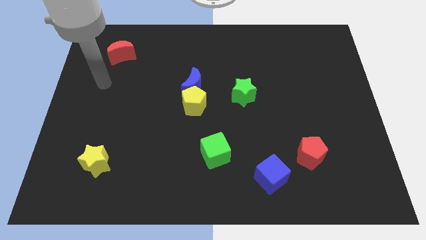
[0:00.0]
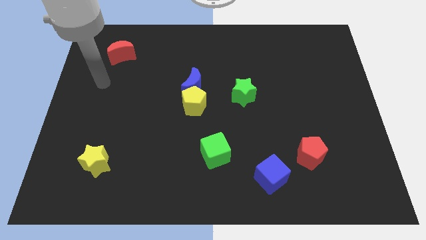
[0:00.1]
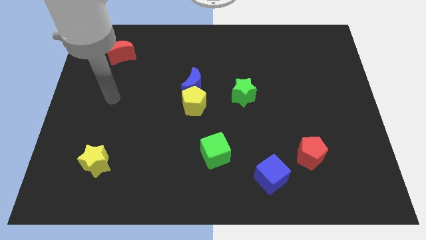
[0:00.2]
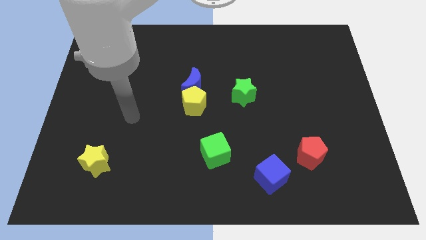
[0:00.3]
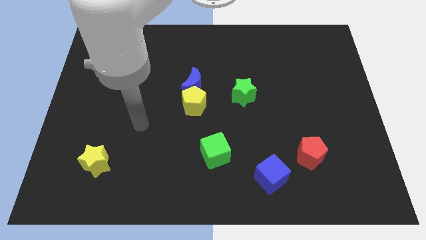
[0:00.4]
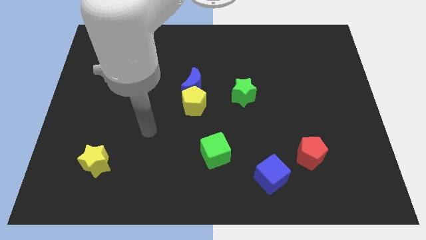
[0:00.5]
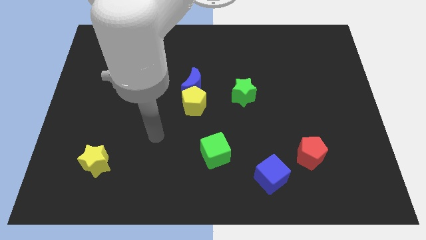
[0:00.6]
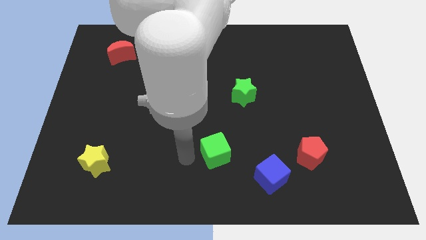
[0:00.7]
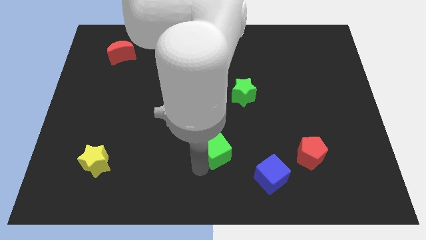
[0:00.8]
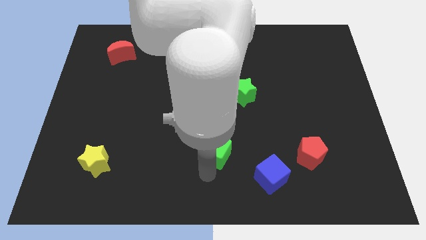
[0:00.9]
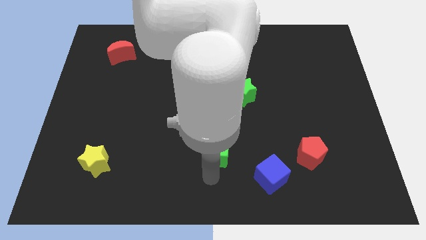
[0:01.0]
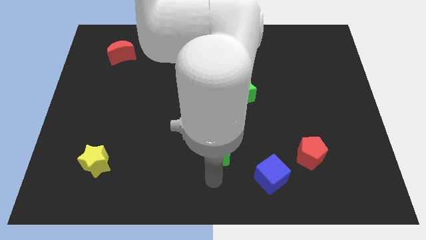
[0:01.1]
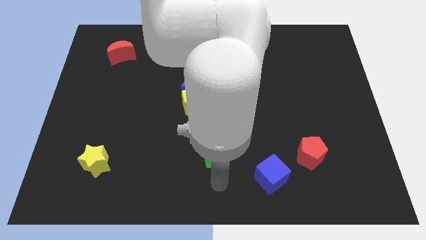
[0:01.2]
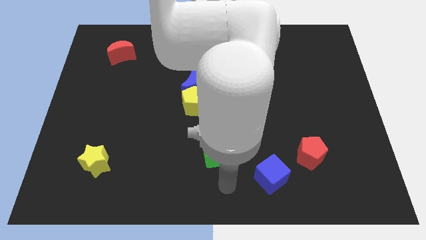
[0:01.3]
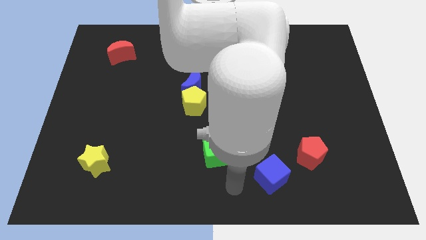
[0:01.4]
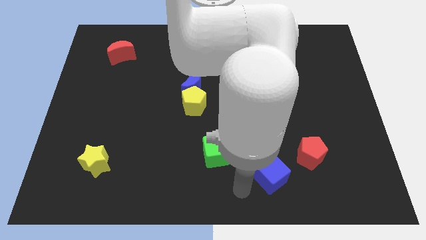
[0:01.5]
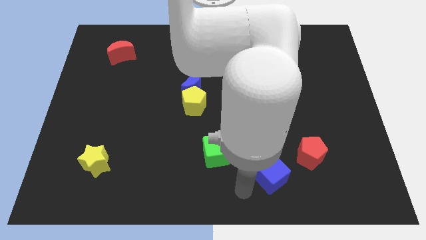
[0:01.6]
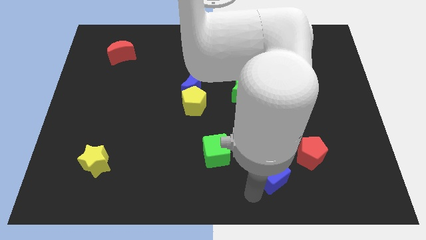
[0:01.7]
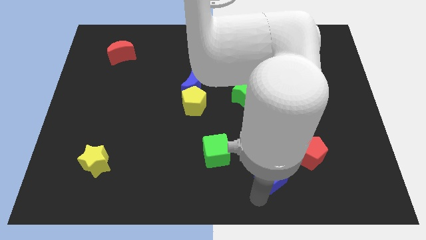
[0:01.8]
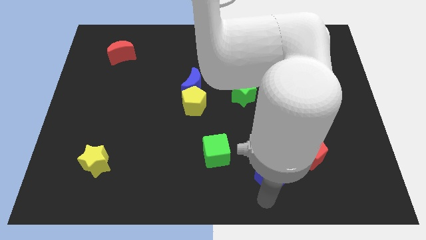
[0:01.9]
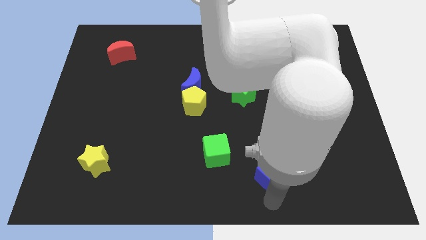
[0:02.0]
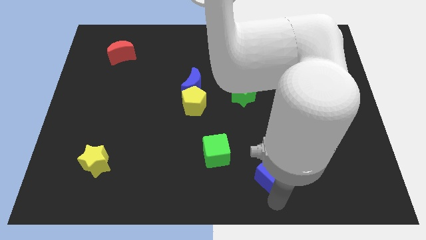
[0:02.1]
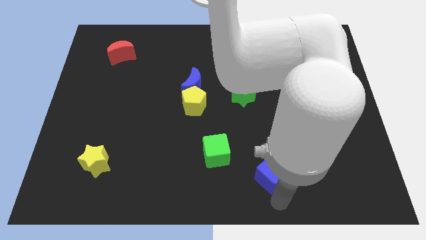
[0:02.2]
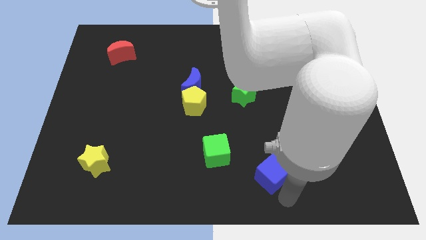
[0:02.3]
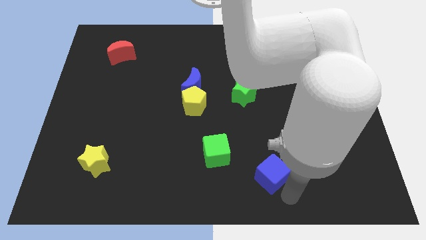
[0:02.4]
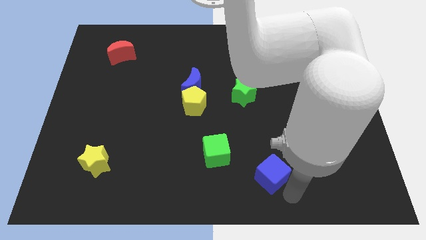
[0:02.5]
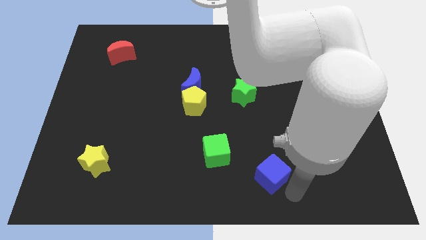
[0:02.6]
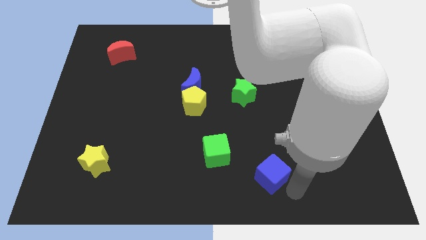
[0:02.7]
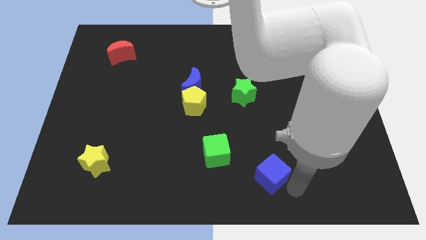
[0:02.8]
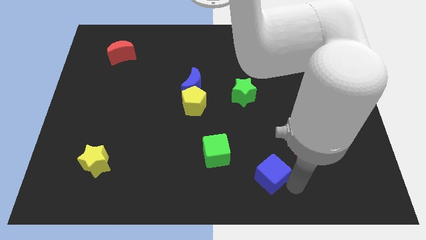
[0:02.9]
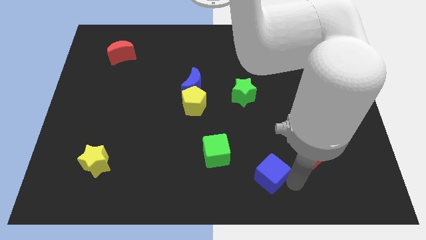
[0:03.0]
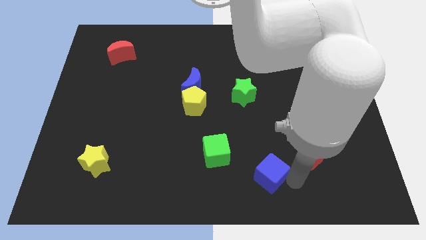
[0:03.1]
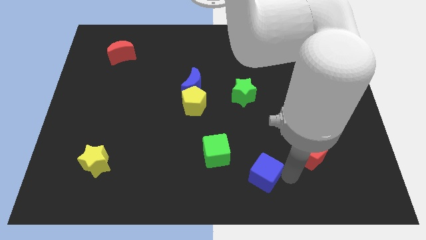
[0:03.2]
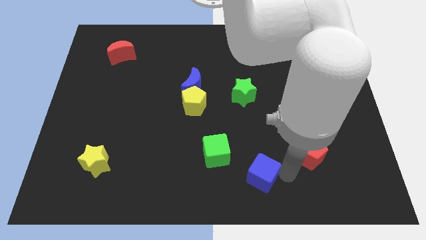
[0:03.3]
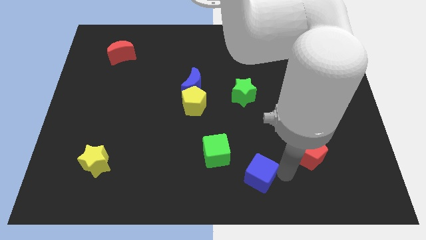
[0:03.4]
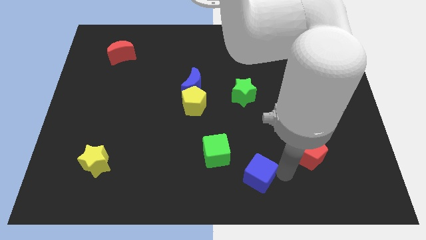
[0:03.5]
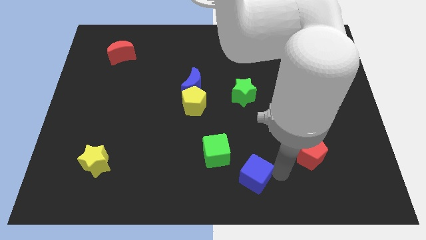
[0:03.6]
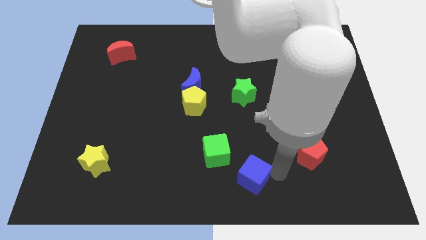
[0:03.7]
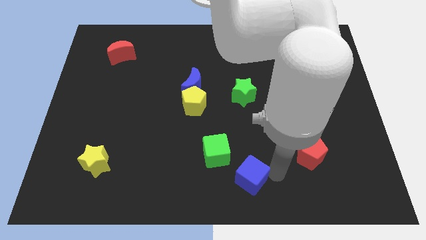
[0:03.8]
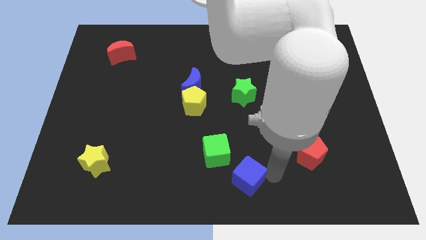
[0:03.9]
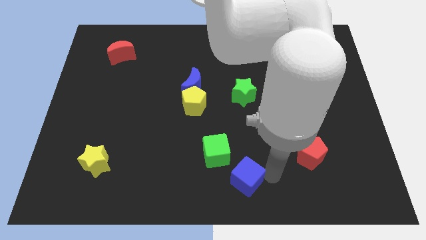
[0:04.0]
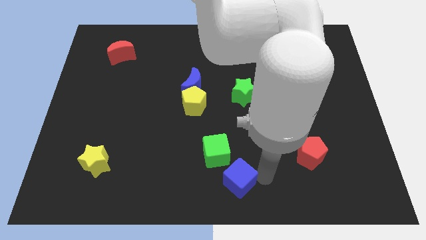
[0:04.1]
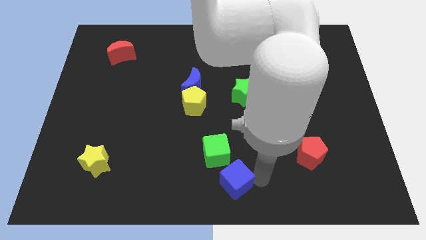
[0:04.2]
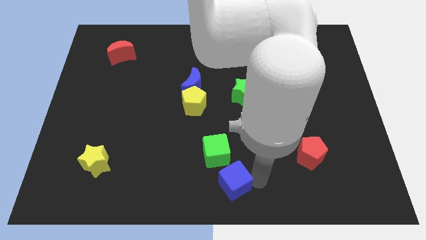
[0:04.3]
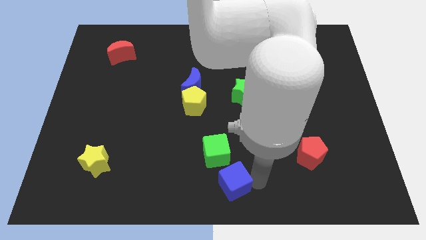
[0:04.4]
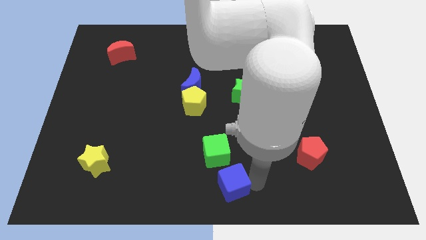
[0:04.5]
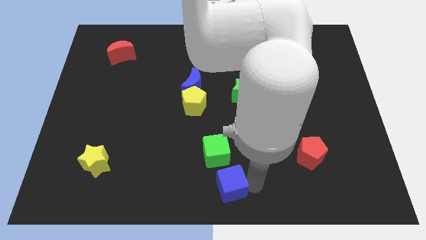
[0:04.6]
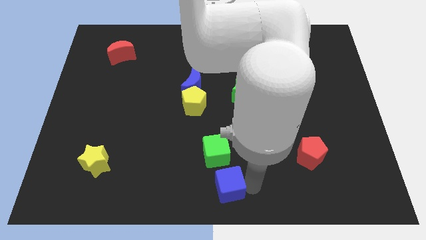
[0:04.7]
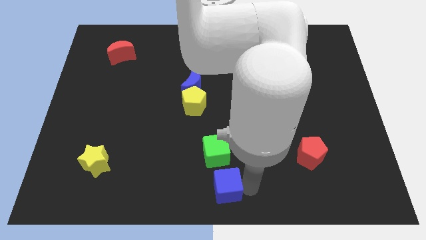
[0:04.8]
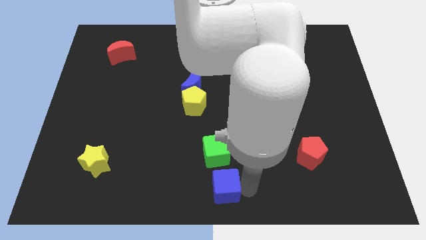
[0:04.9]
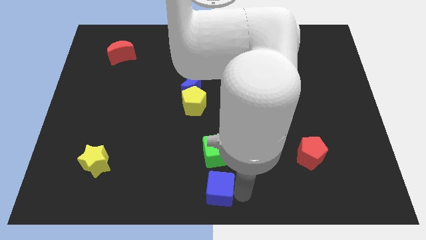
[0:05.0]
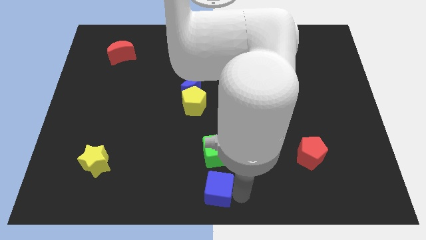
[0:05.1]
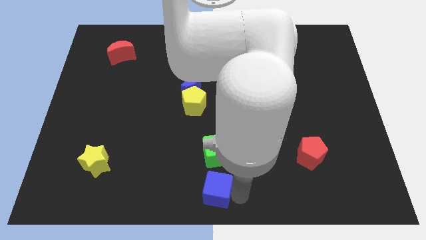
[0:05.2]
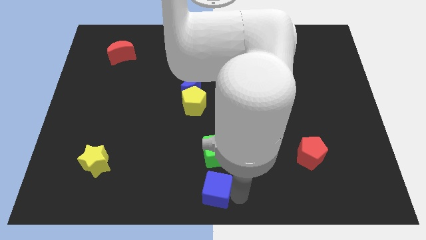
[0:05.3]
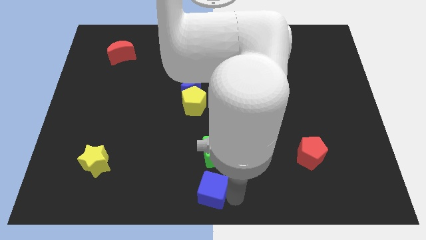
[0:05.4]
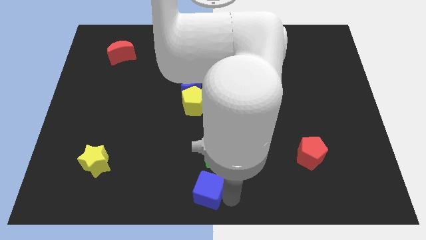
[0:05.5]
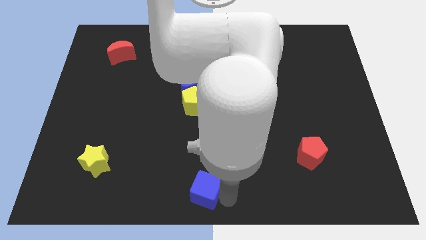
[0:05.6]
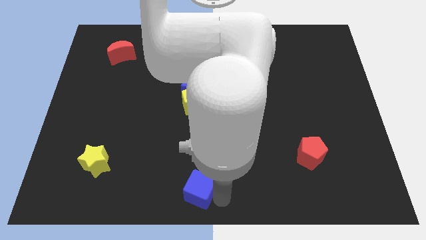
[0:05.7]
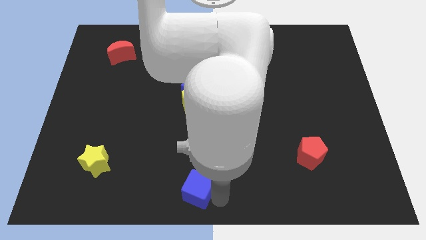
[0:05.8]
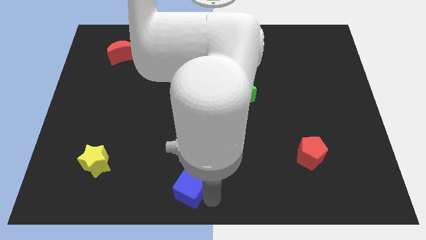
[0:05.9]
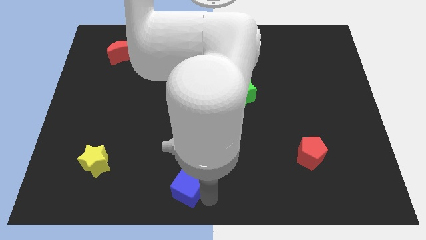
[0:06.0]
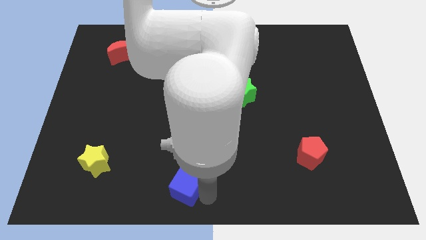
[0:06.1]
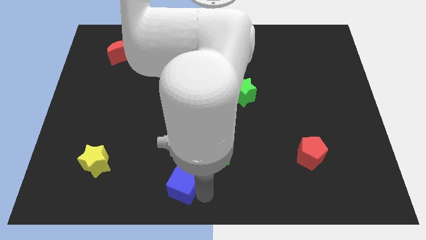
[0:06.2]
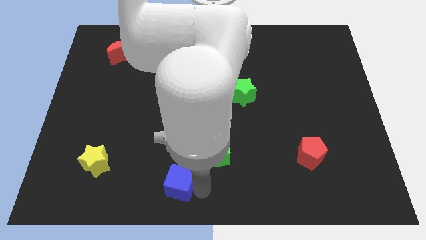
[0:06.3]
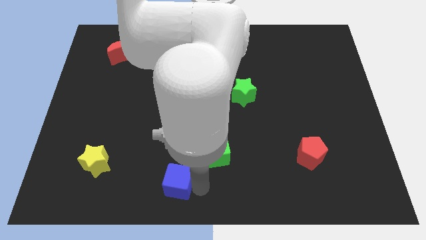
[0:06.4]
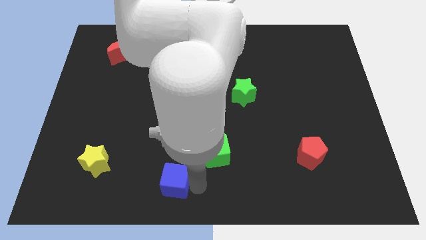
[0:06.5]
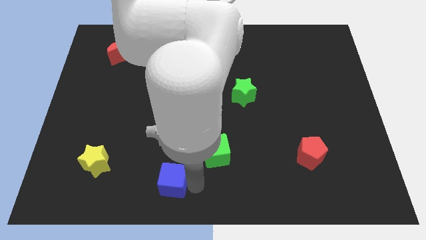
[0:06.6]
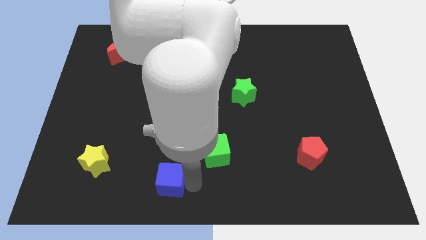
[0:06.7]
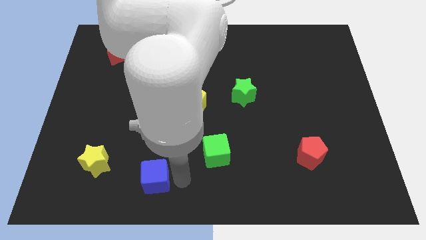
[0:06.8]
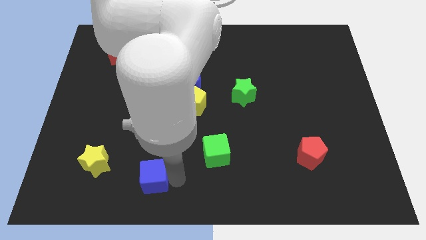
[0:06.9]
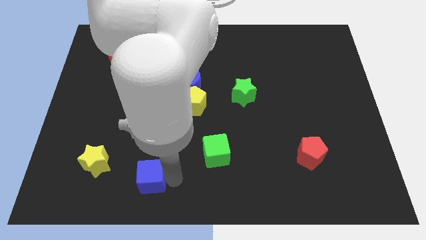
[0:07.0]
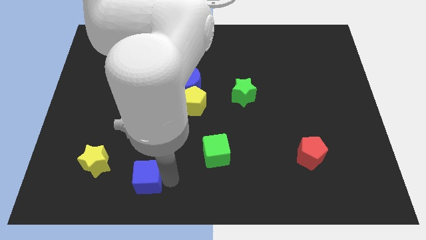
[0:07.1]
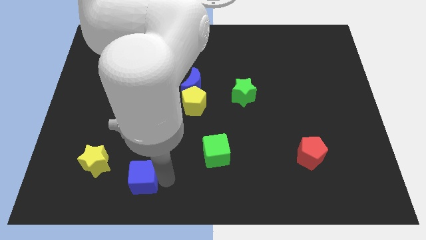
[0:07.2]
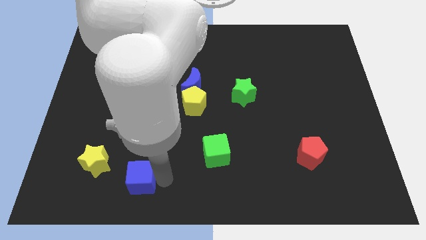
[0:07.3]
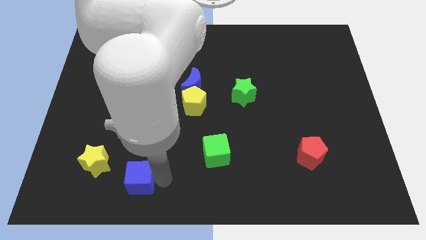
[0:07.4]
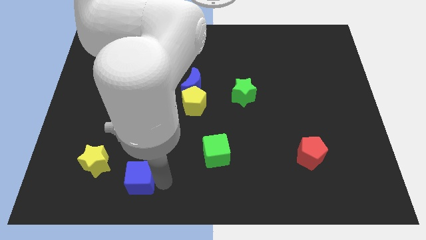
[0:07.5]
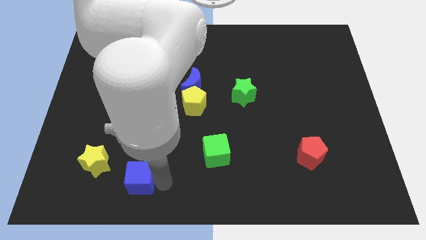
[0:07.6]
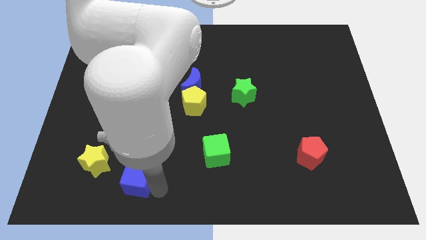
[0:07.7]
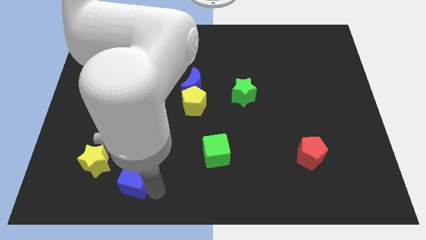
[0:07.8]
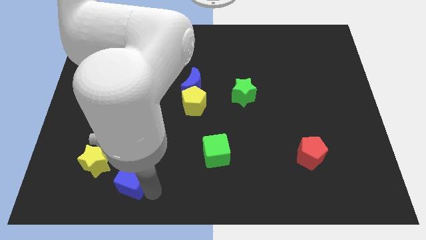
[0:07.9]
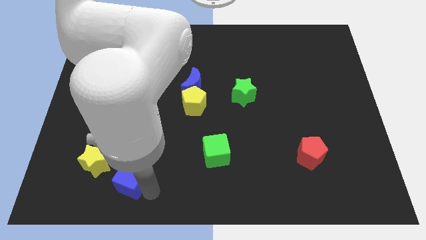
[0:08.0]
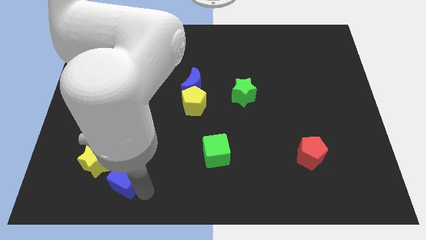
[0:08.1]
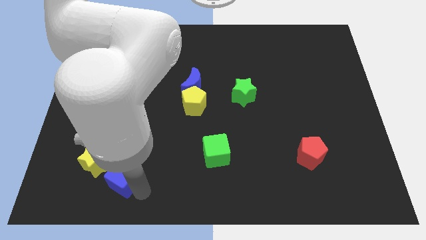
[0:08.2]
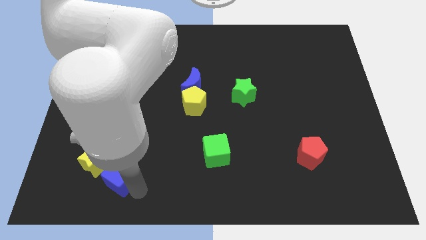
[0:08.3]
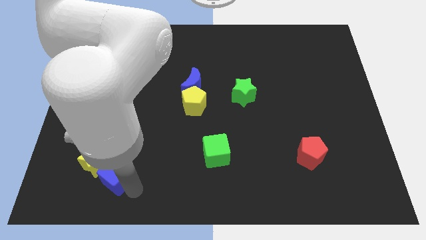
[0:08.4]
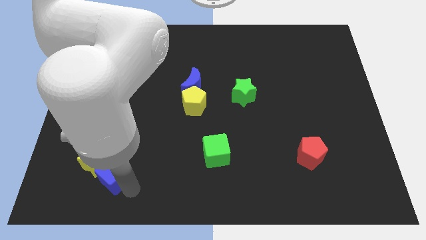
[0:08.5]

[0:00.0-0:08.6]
slide the blue cube to the yellow star

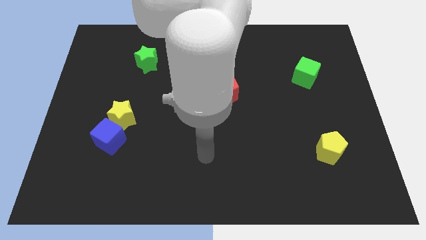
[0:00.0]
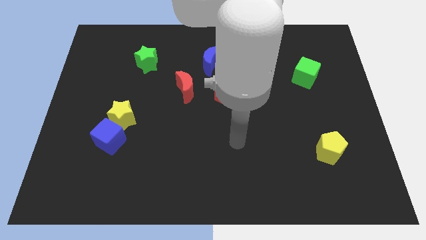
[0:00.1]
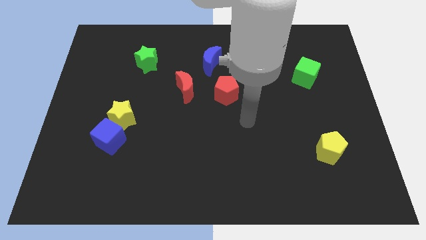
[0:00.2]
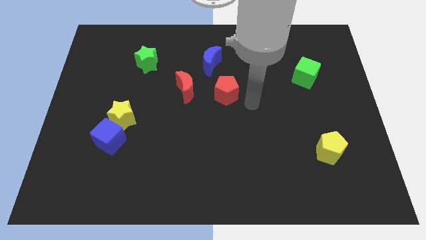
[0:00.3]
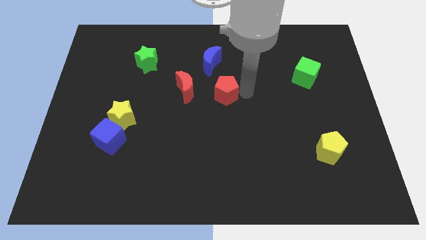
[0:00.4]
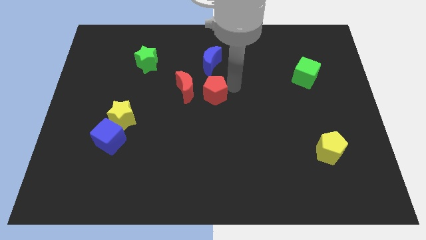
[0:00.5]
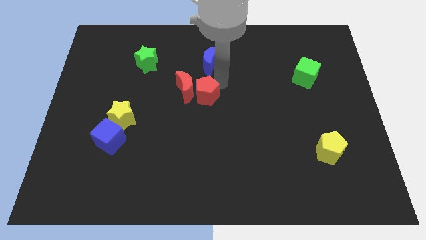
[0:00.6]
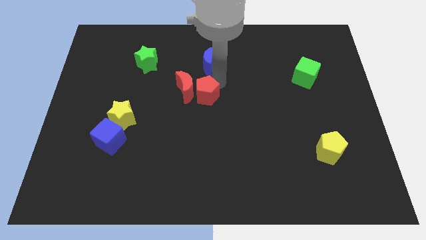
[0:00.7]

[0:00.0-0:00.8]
move the red pentagon to the red moon
